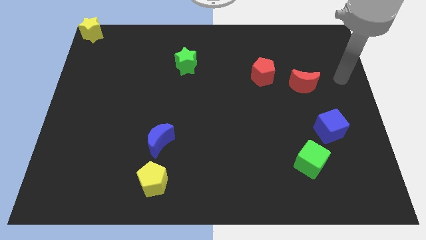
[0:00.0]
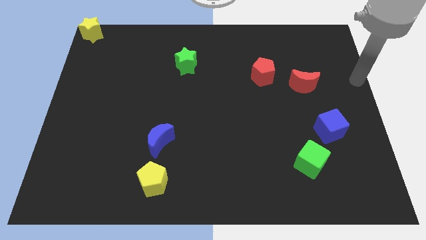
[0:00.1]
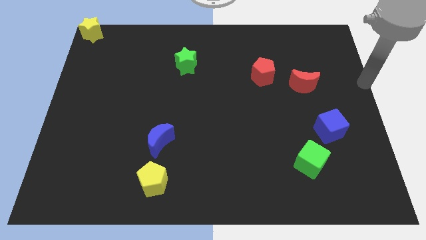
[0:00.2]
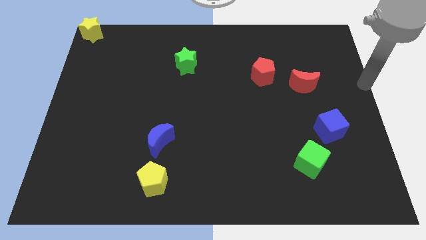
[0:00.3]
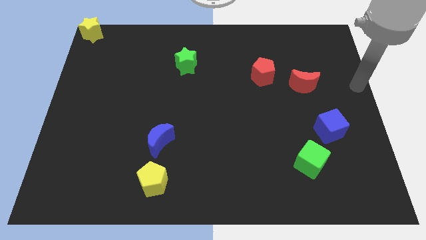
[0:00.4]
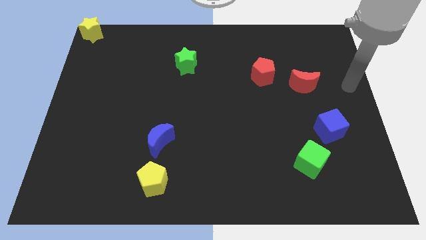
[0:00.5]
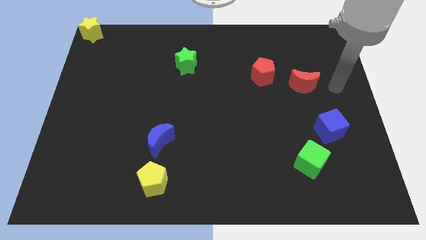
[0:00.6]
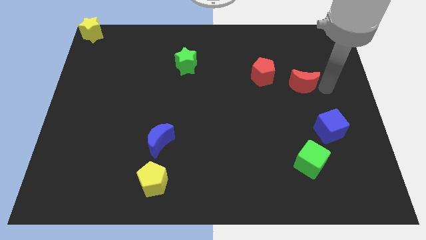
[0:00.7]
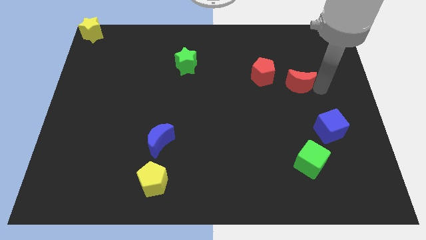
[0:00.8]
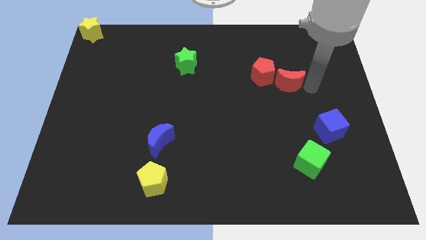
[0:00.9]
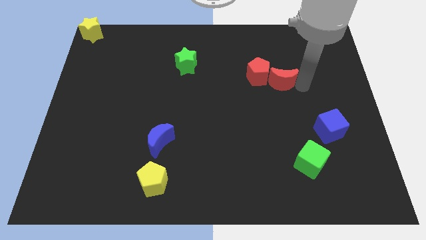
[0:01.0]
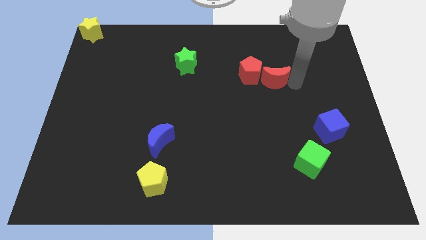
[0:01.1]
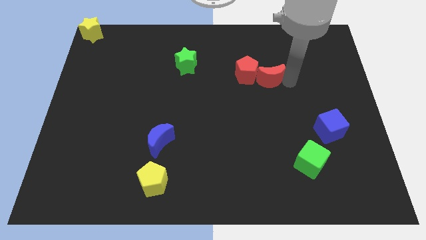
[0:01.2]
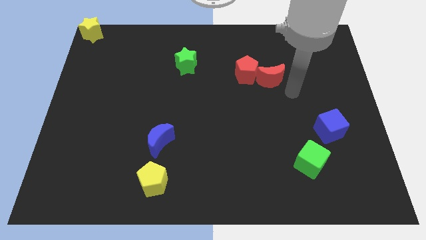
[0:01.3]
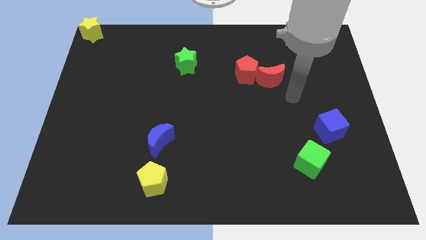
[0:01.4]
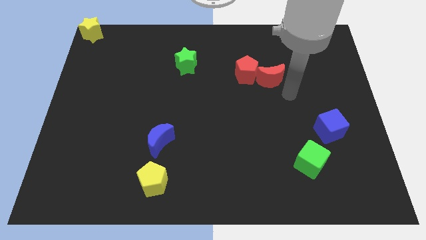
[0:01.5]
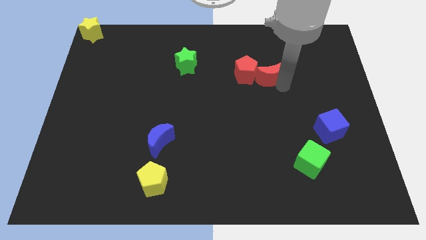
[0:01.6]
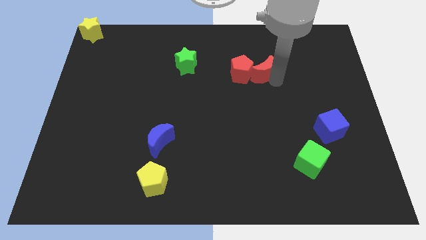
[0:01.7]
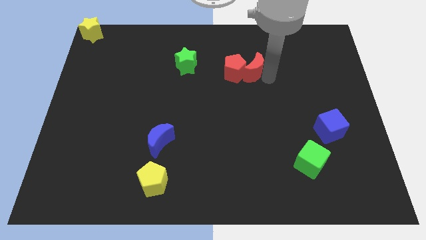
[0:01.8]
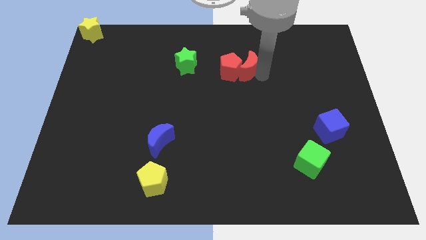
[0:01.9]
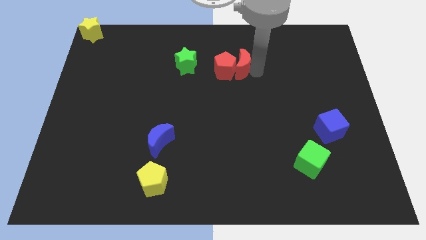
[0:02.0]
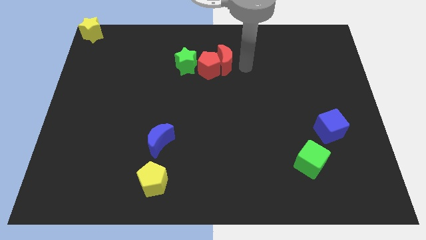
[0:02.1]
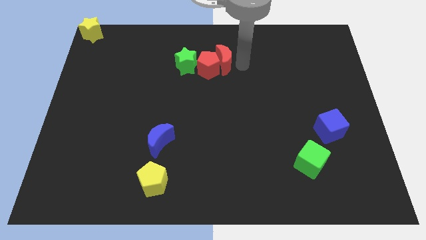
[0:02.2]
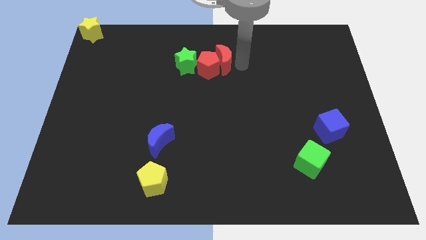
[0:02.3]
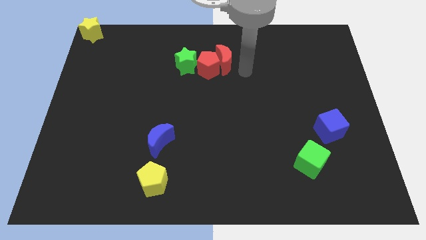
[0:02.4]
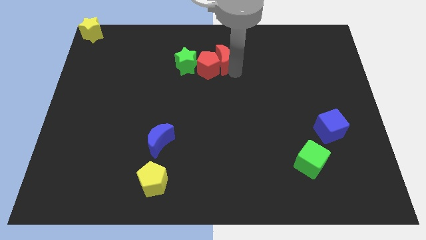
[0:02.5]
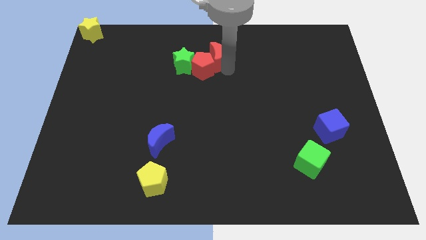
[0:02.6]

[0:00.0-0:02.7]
push the red crescent with red pentagon into the green star to the right

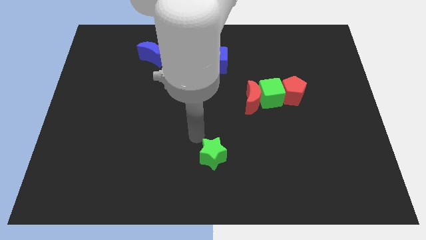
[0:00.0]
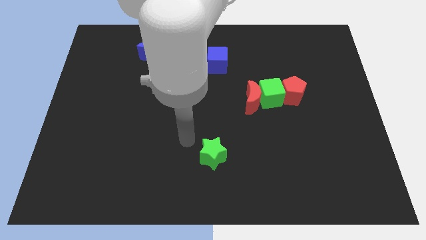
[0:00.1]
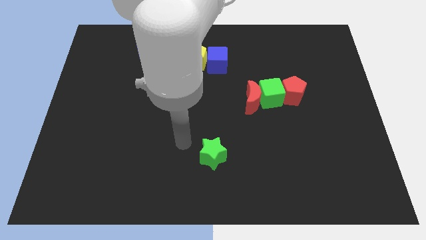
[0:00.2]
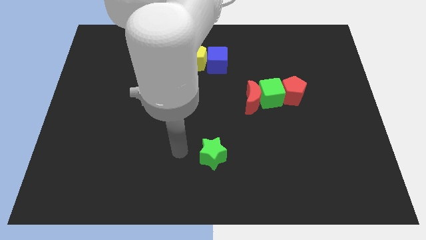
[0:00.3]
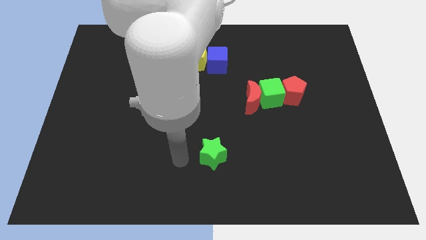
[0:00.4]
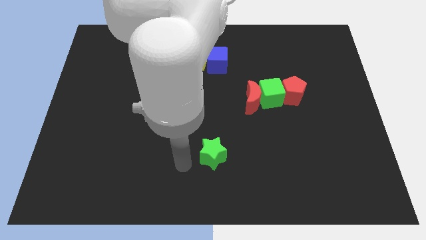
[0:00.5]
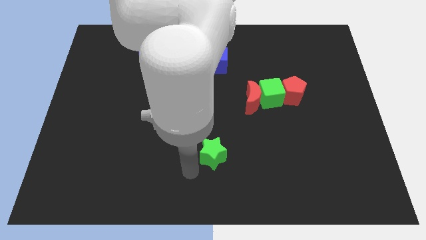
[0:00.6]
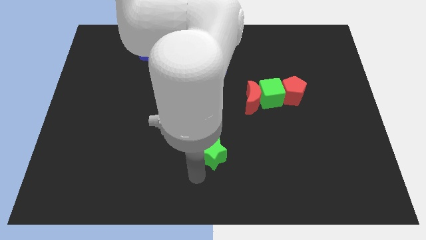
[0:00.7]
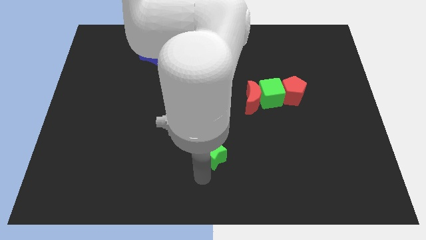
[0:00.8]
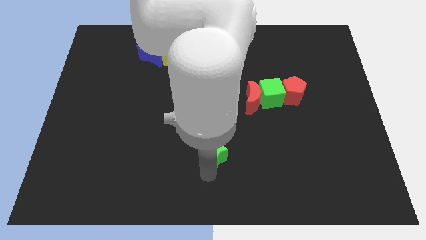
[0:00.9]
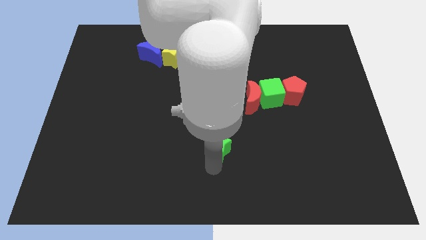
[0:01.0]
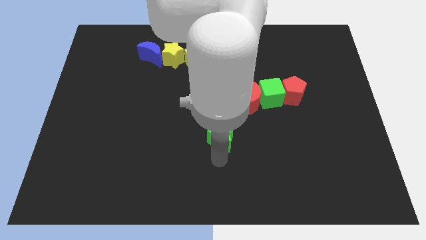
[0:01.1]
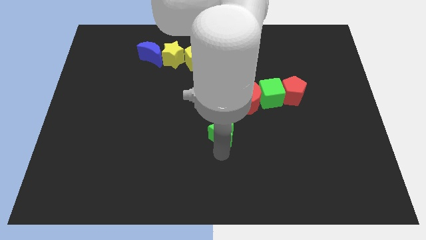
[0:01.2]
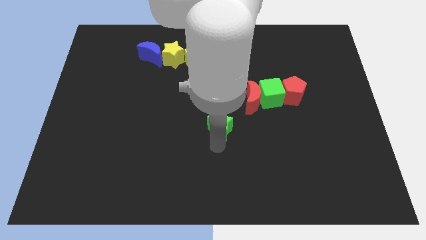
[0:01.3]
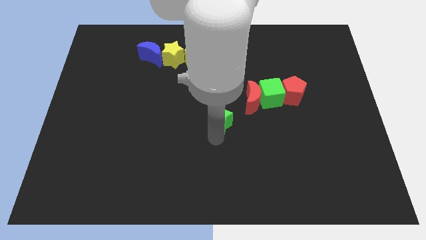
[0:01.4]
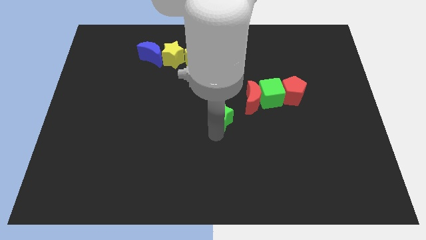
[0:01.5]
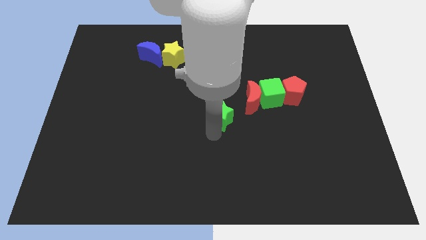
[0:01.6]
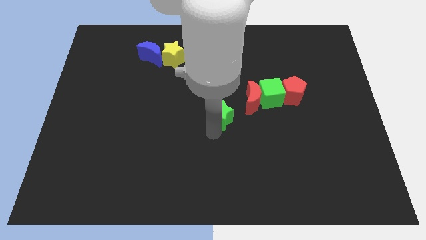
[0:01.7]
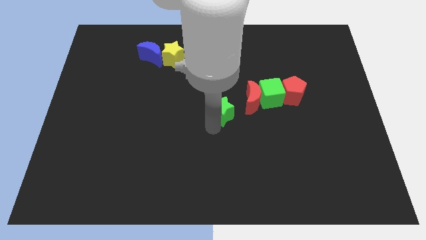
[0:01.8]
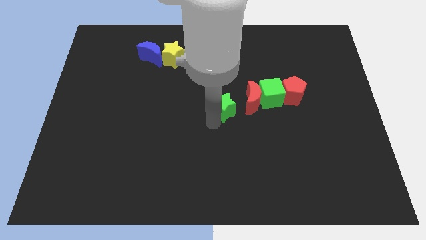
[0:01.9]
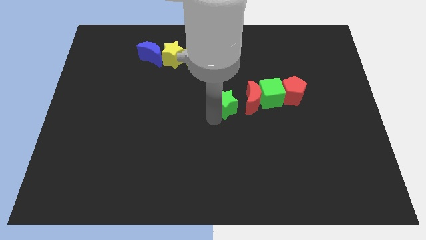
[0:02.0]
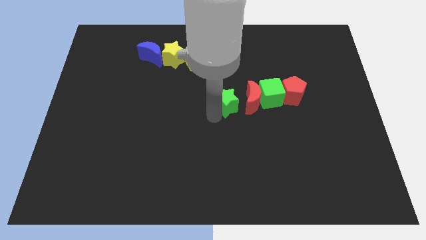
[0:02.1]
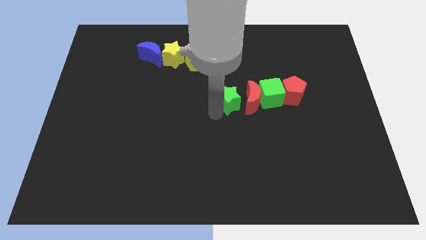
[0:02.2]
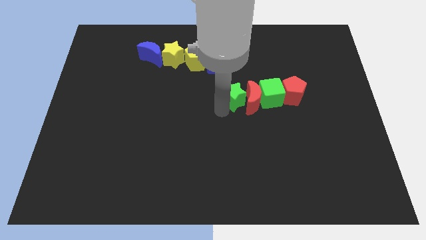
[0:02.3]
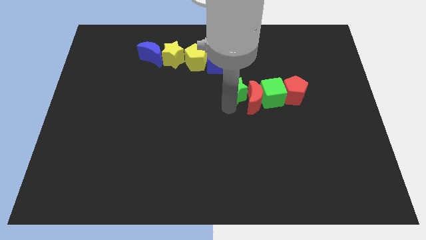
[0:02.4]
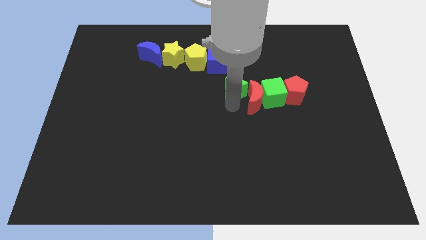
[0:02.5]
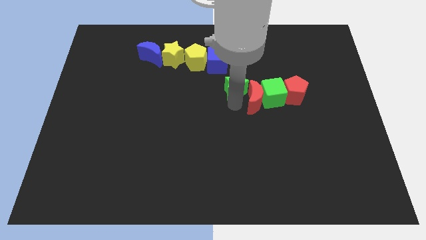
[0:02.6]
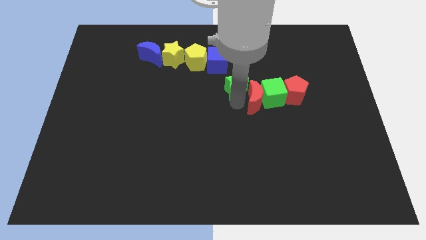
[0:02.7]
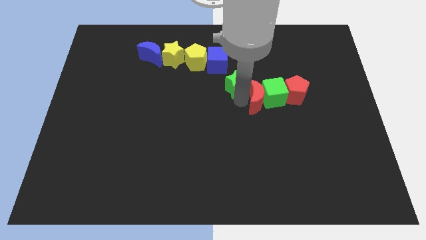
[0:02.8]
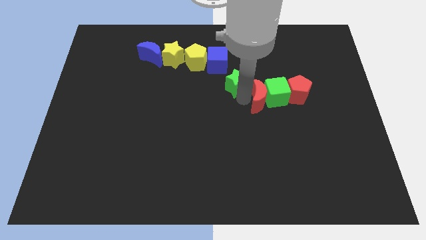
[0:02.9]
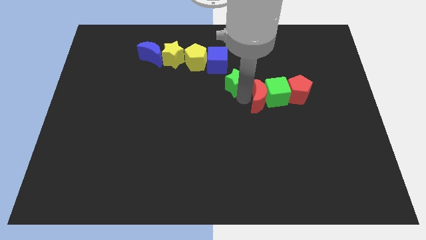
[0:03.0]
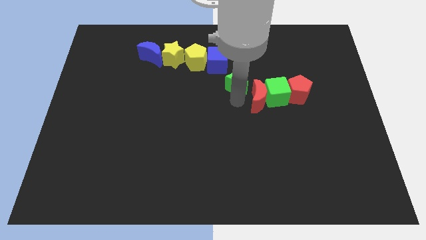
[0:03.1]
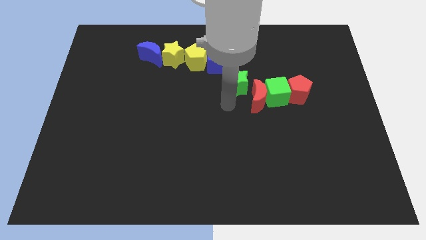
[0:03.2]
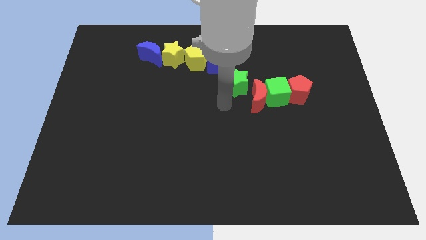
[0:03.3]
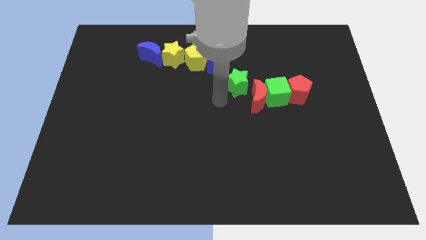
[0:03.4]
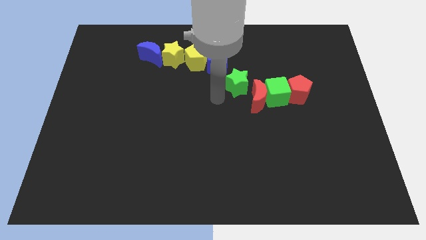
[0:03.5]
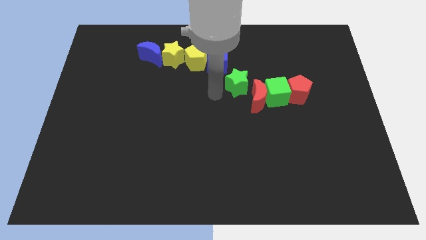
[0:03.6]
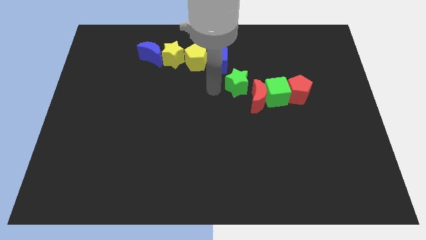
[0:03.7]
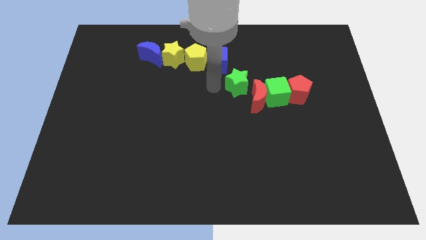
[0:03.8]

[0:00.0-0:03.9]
move the green star to the bottom right of the blue cube

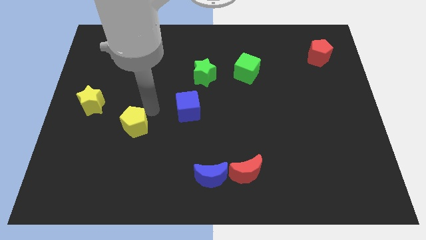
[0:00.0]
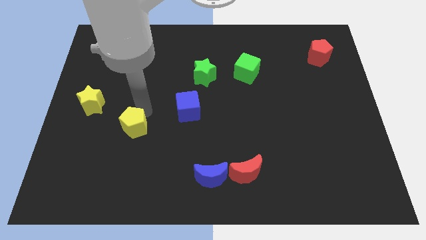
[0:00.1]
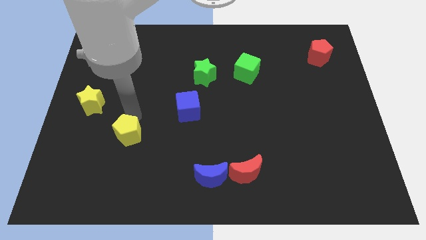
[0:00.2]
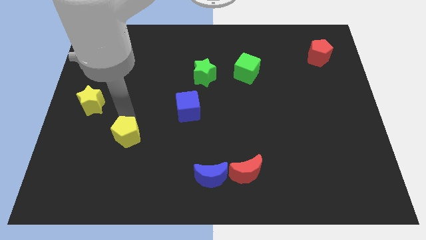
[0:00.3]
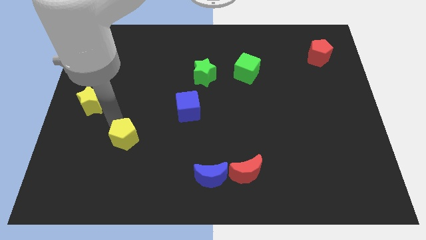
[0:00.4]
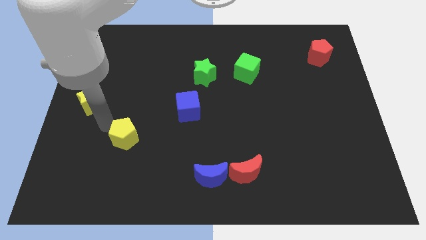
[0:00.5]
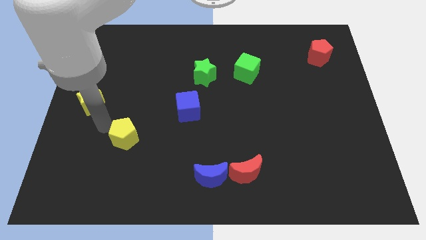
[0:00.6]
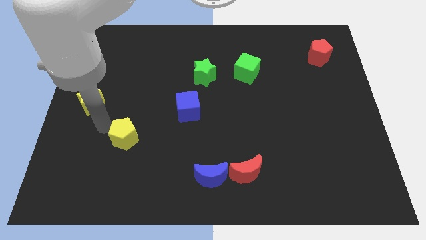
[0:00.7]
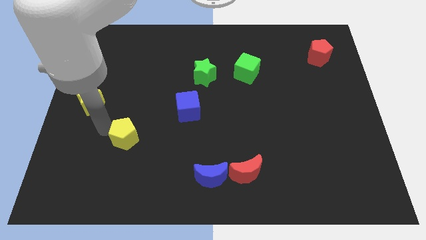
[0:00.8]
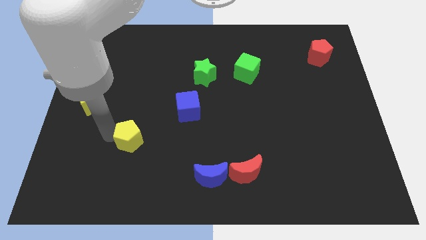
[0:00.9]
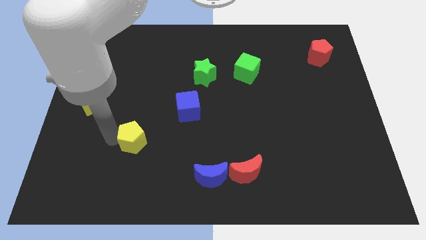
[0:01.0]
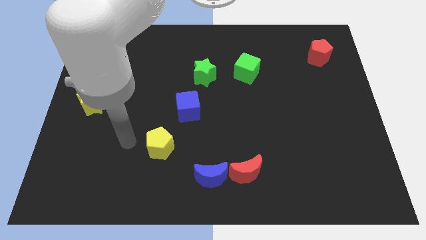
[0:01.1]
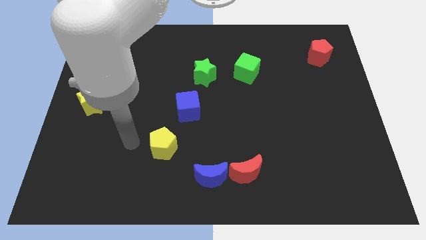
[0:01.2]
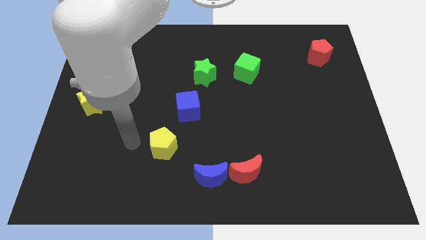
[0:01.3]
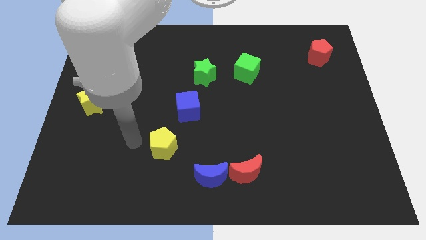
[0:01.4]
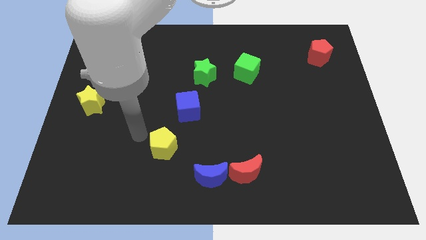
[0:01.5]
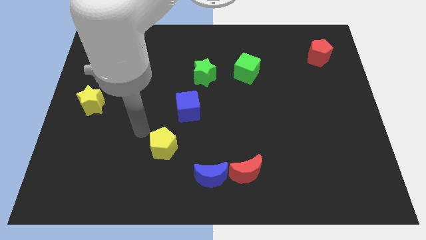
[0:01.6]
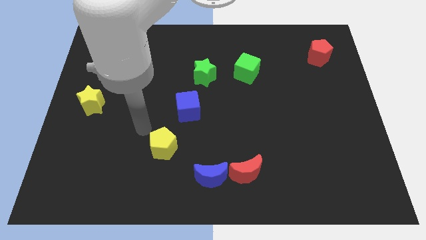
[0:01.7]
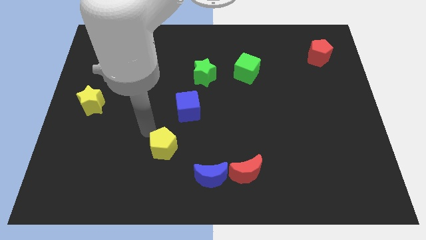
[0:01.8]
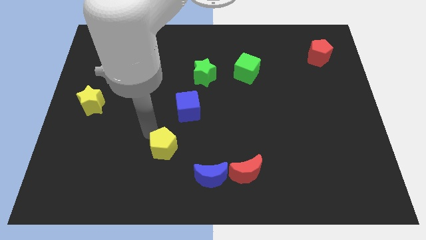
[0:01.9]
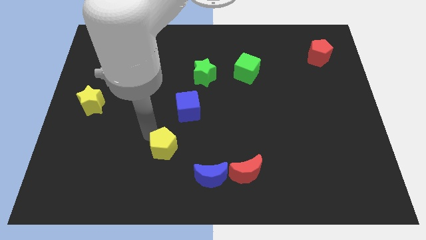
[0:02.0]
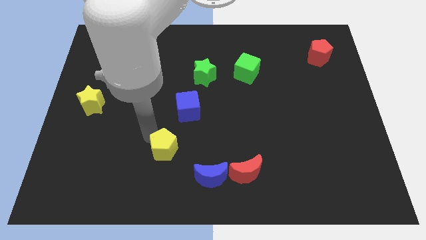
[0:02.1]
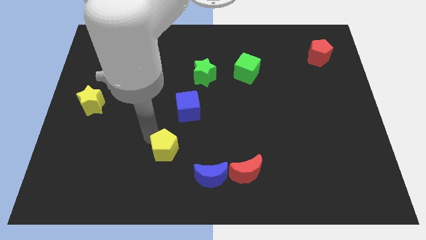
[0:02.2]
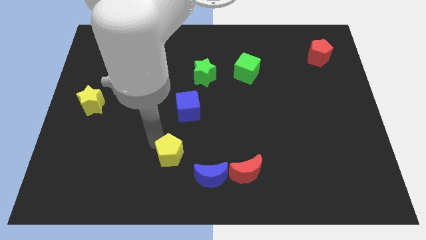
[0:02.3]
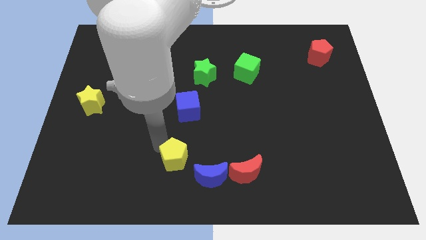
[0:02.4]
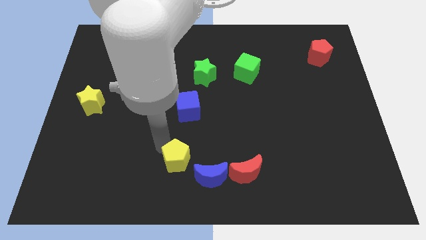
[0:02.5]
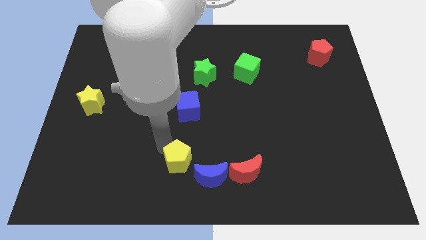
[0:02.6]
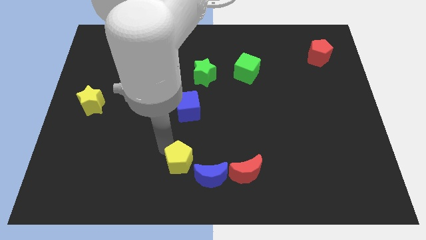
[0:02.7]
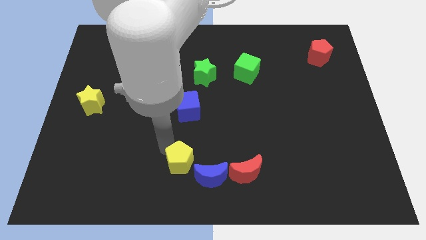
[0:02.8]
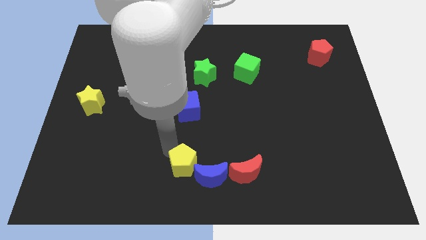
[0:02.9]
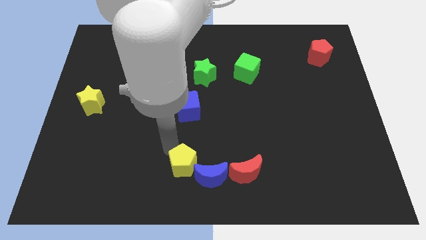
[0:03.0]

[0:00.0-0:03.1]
push the yellow pentagon beside the blue moon
